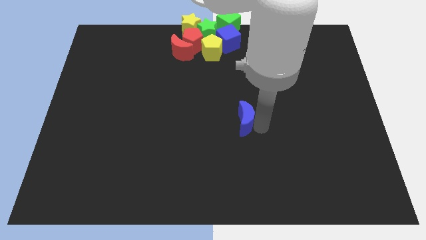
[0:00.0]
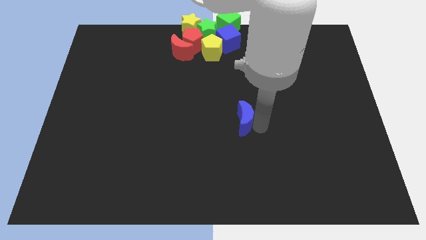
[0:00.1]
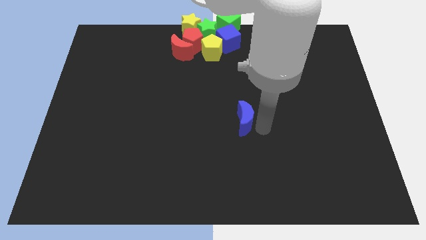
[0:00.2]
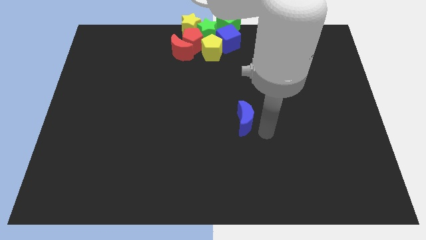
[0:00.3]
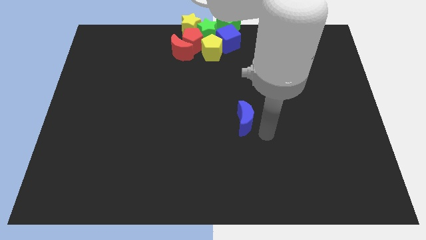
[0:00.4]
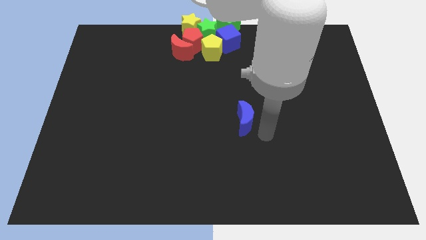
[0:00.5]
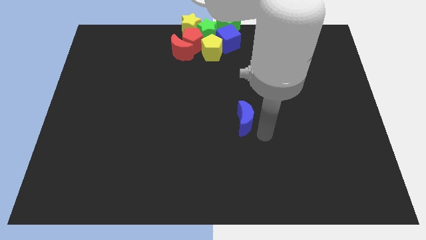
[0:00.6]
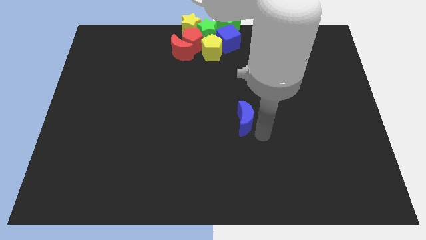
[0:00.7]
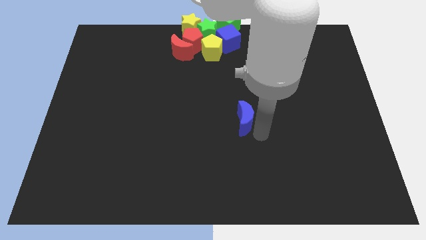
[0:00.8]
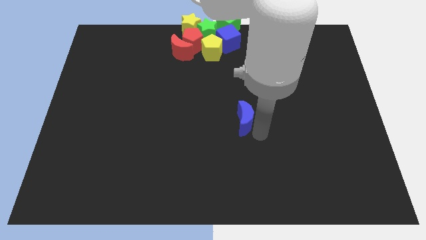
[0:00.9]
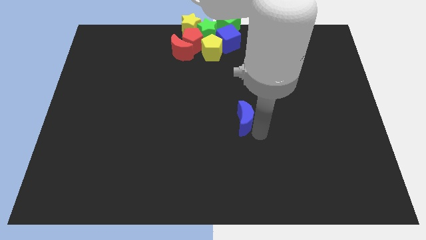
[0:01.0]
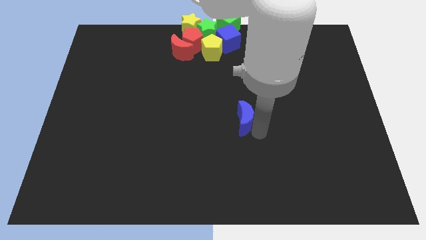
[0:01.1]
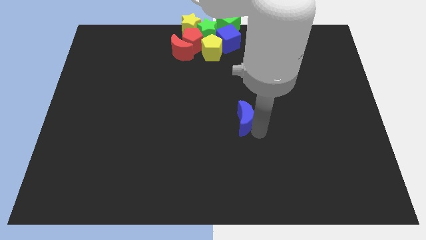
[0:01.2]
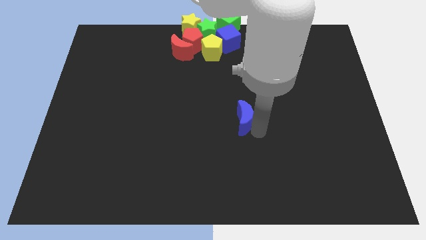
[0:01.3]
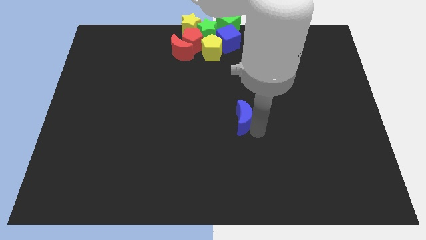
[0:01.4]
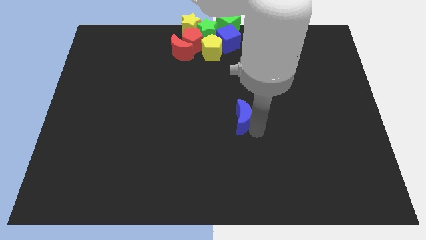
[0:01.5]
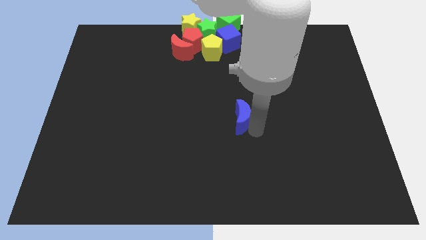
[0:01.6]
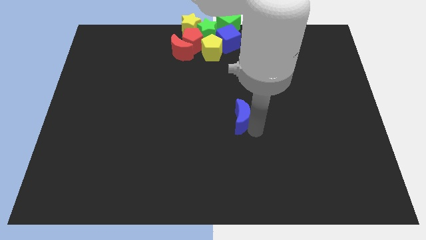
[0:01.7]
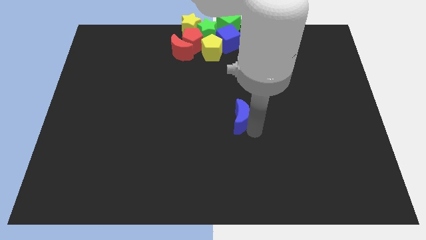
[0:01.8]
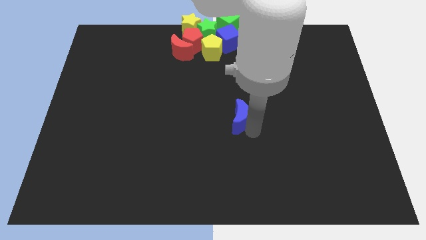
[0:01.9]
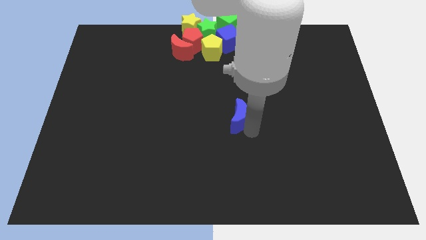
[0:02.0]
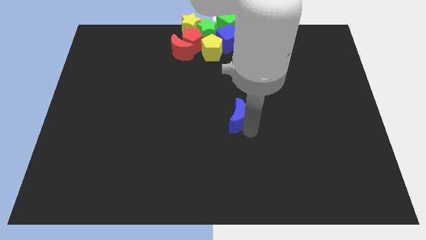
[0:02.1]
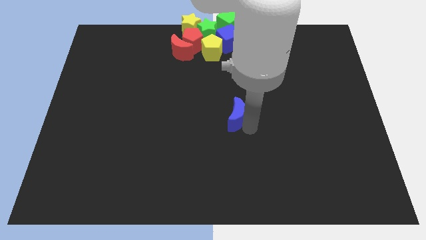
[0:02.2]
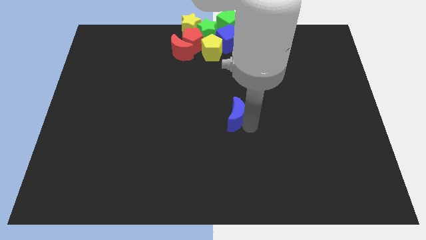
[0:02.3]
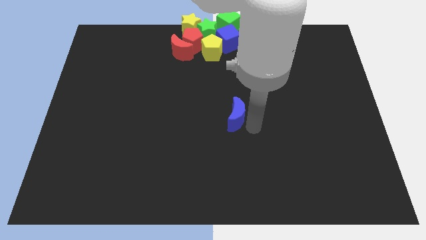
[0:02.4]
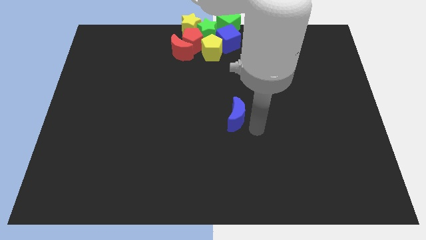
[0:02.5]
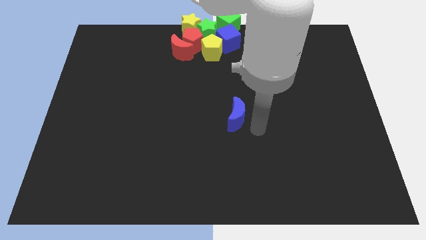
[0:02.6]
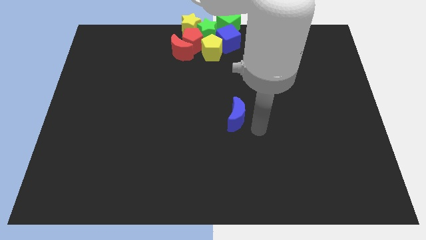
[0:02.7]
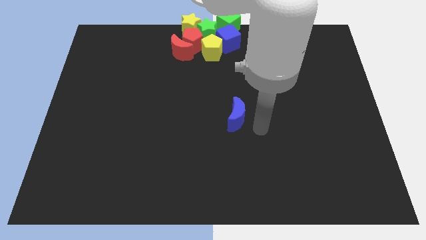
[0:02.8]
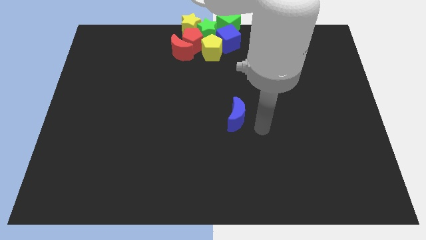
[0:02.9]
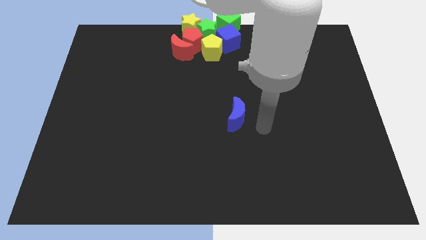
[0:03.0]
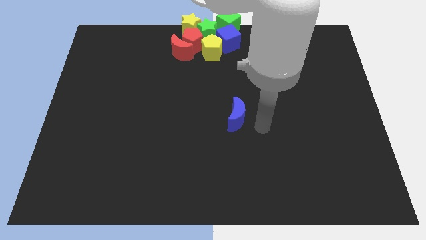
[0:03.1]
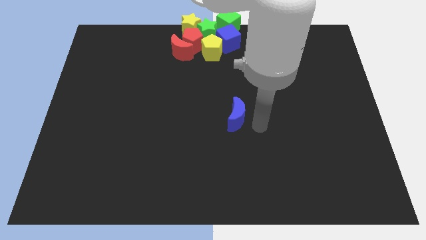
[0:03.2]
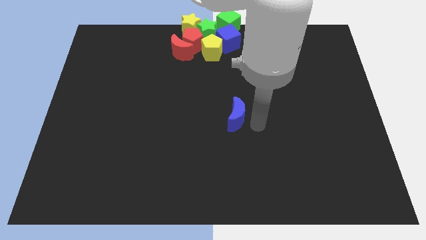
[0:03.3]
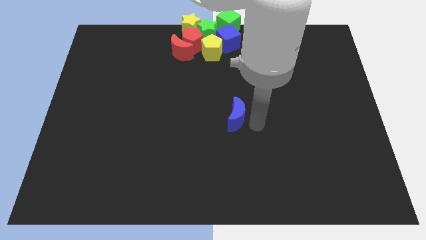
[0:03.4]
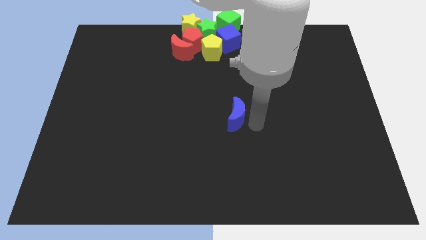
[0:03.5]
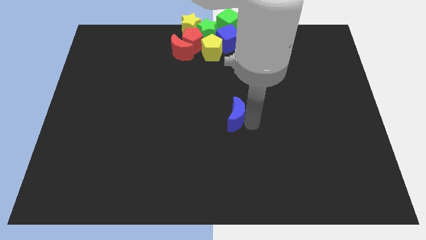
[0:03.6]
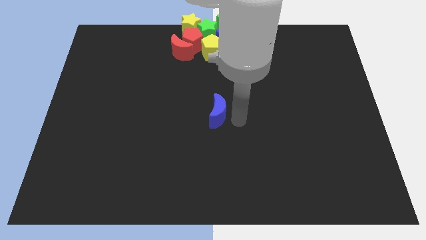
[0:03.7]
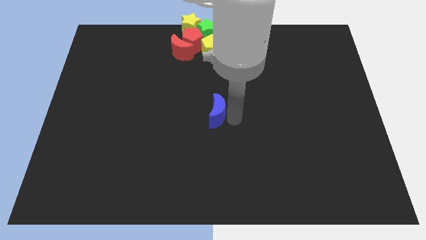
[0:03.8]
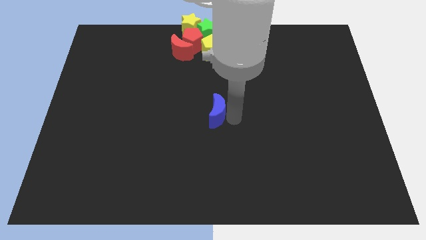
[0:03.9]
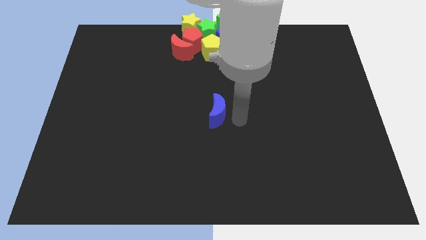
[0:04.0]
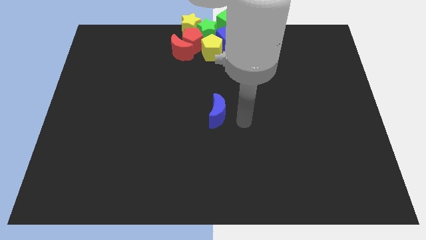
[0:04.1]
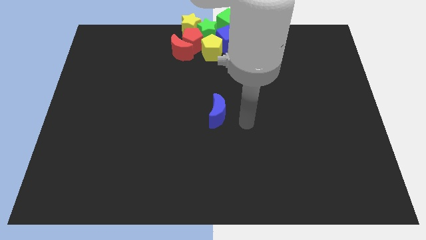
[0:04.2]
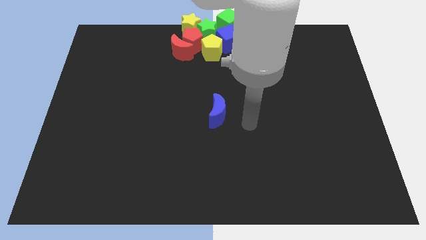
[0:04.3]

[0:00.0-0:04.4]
push the blue crescent to the center of the board

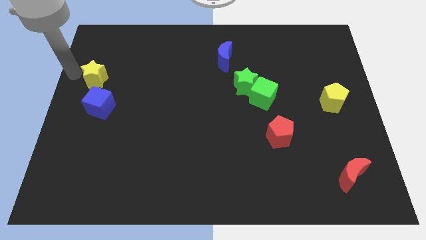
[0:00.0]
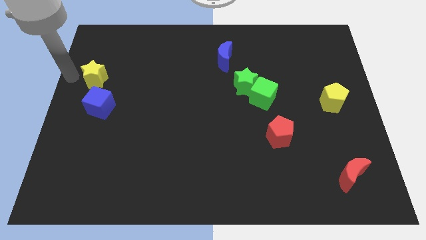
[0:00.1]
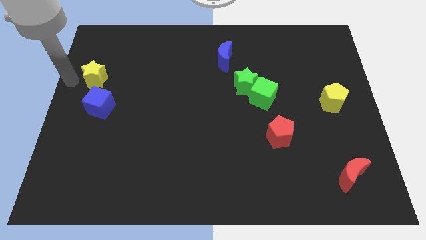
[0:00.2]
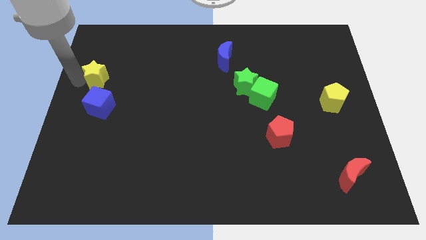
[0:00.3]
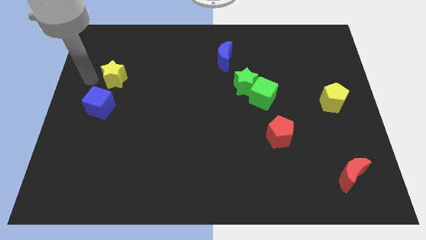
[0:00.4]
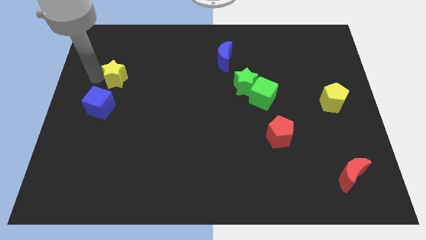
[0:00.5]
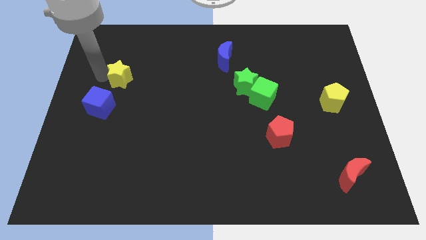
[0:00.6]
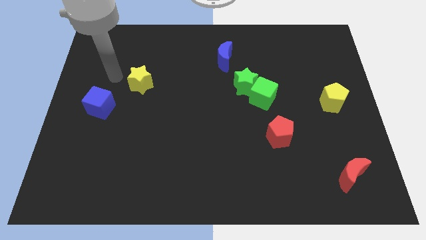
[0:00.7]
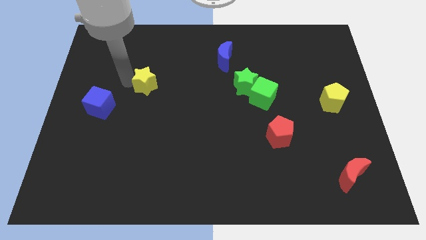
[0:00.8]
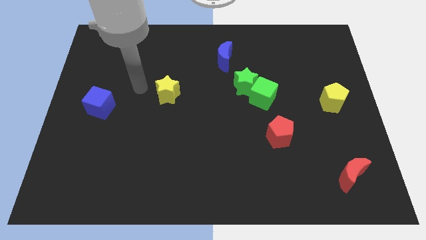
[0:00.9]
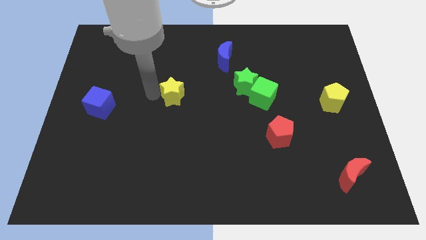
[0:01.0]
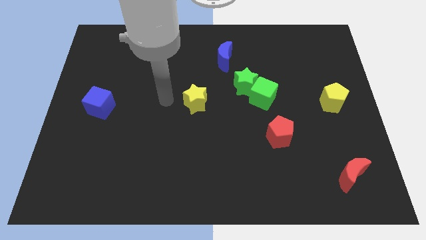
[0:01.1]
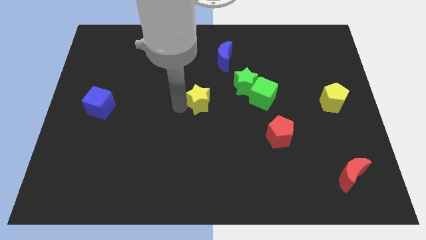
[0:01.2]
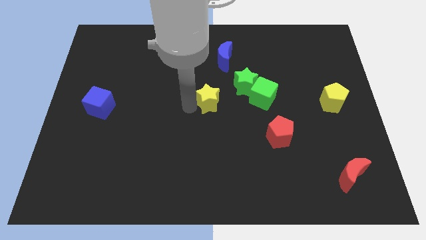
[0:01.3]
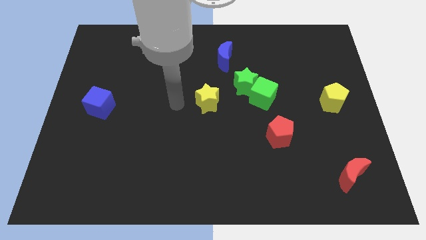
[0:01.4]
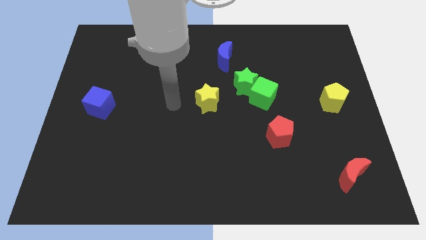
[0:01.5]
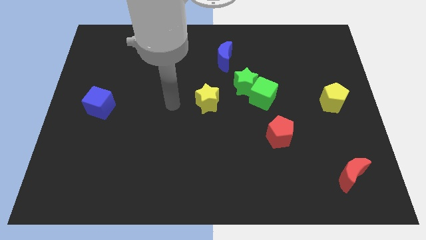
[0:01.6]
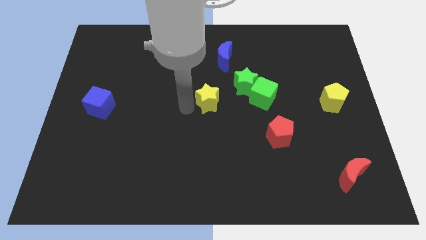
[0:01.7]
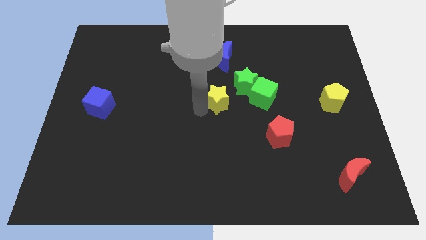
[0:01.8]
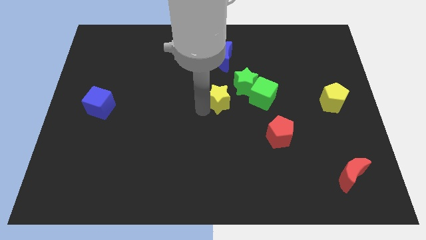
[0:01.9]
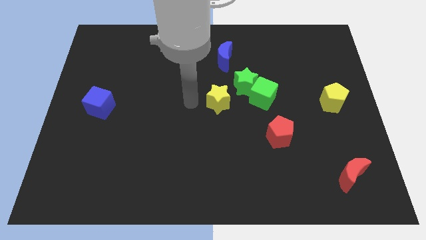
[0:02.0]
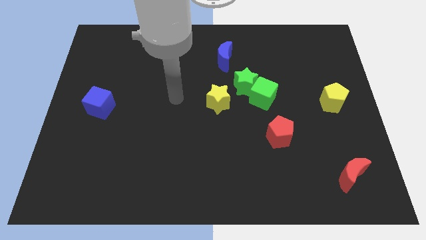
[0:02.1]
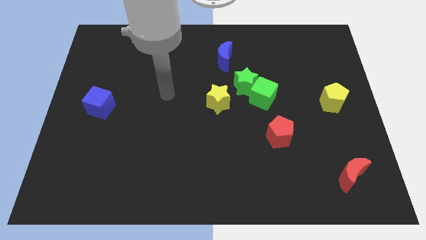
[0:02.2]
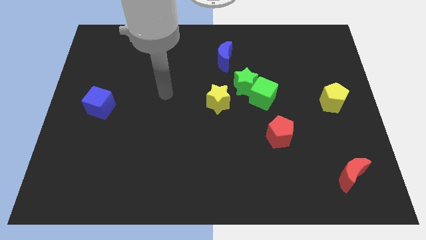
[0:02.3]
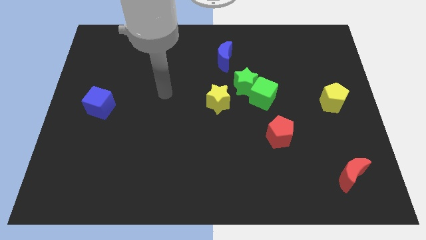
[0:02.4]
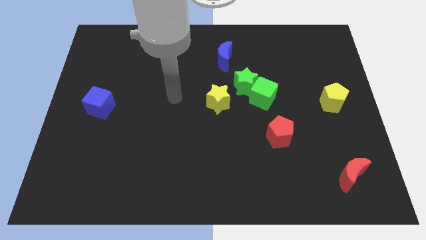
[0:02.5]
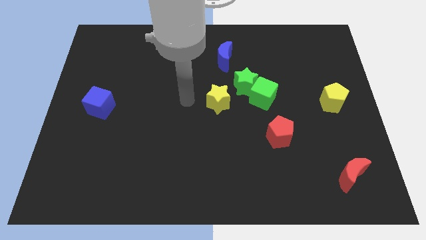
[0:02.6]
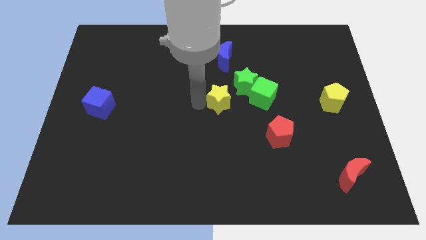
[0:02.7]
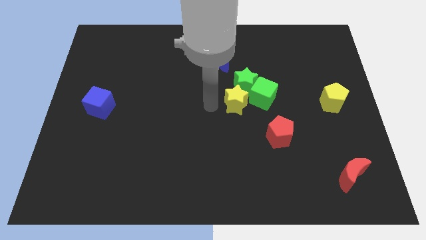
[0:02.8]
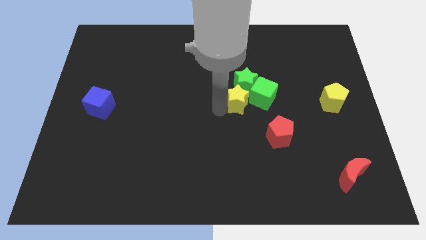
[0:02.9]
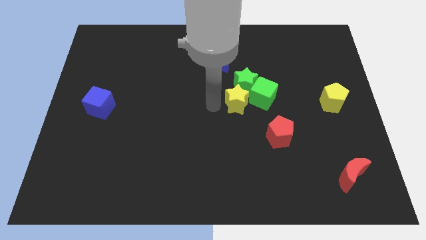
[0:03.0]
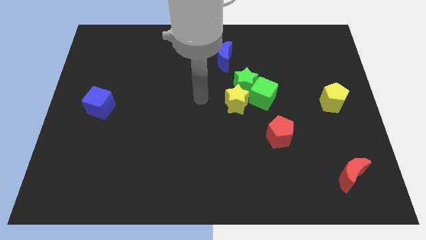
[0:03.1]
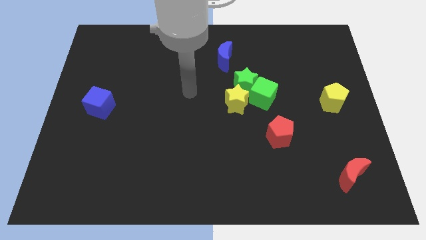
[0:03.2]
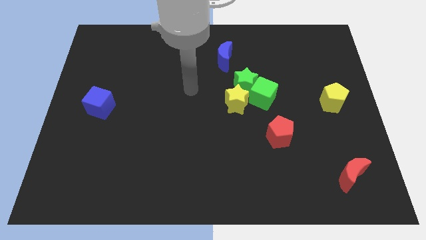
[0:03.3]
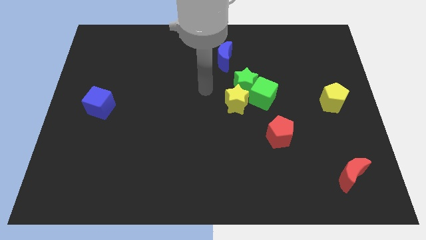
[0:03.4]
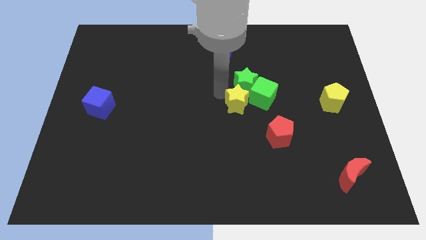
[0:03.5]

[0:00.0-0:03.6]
push the yellow star to the left of the green blocks

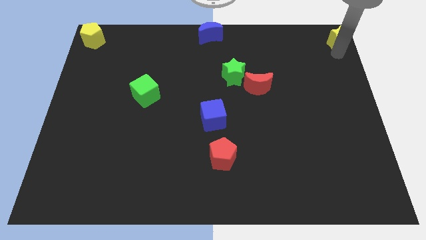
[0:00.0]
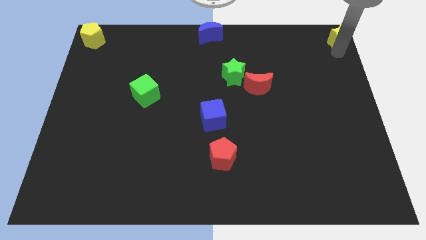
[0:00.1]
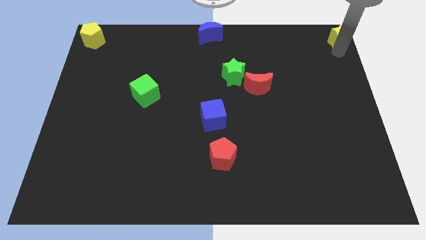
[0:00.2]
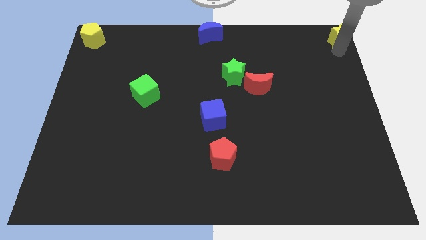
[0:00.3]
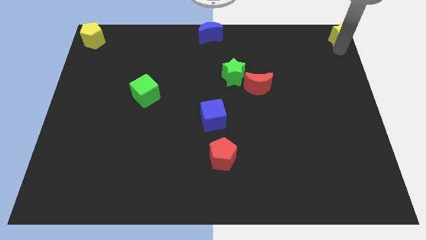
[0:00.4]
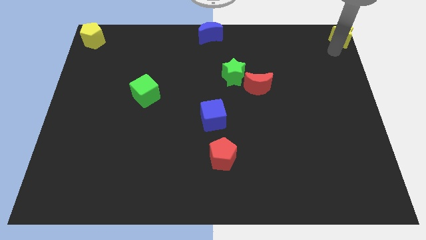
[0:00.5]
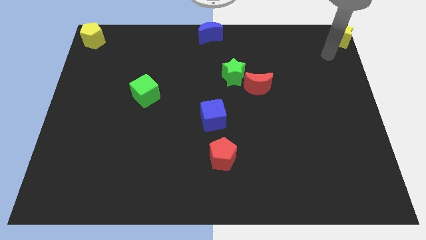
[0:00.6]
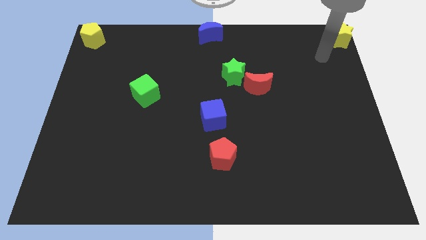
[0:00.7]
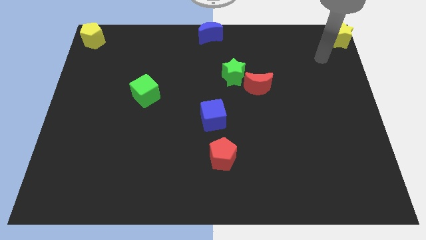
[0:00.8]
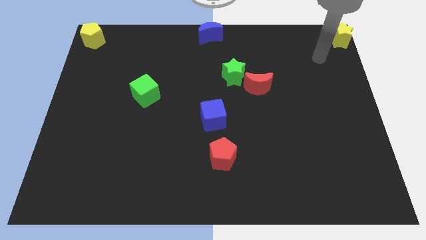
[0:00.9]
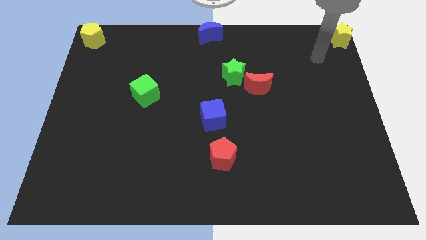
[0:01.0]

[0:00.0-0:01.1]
slightly push the yellow star diagonal to the right of the blue crescent
